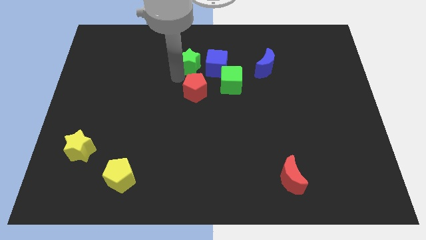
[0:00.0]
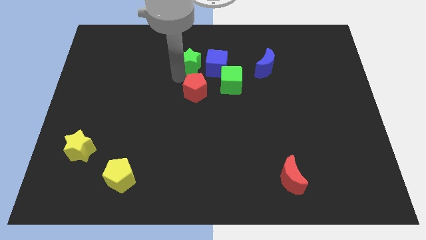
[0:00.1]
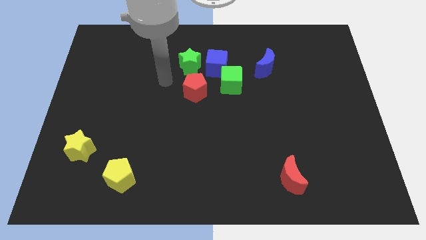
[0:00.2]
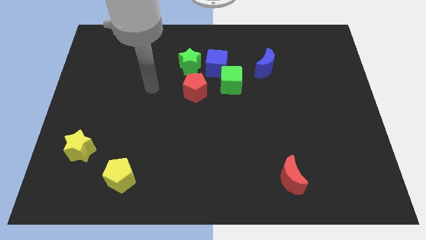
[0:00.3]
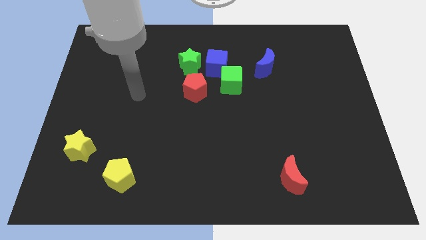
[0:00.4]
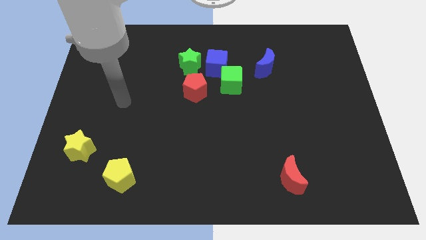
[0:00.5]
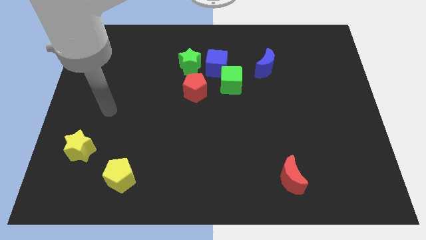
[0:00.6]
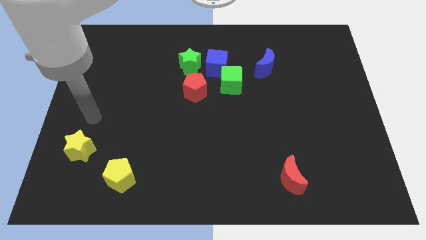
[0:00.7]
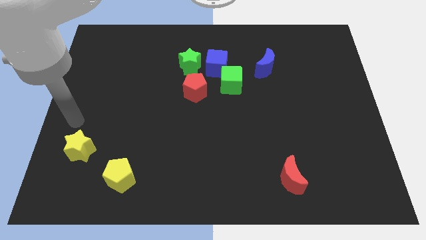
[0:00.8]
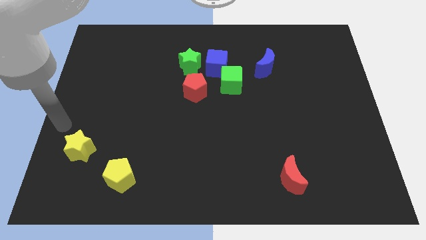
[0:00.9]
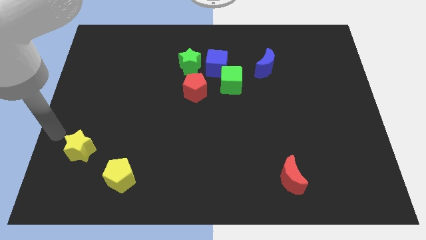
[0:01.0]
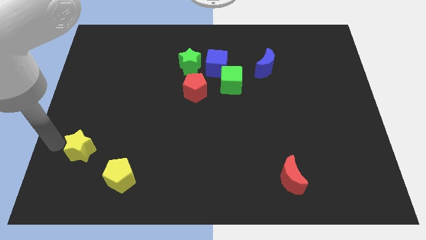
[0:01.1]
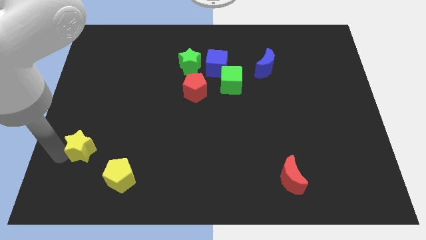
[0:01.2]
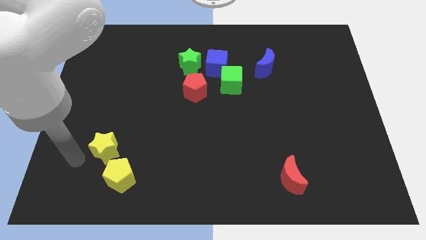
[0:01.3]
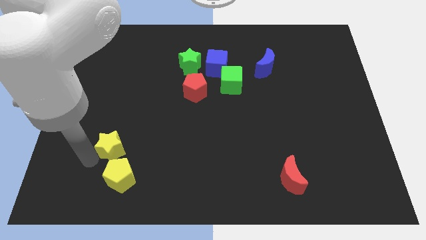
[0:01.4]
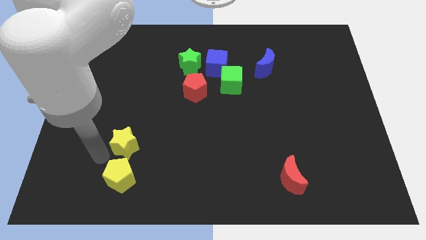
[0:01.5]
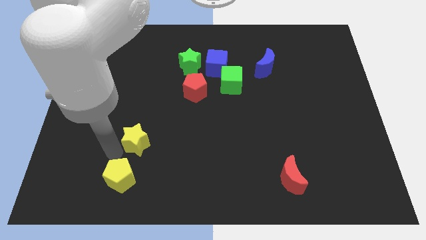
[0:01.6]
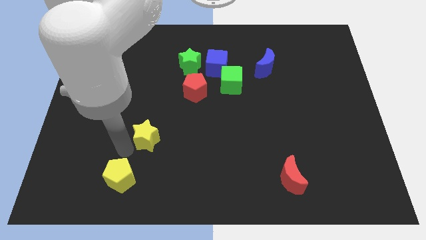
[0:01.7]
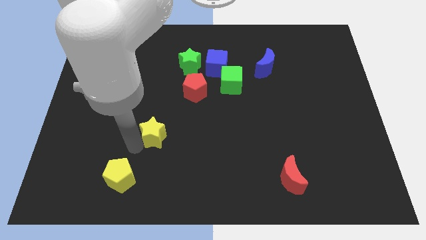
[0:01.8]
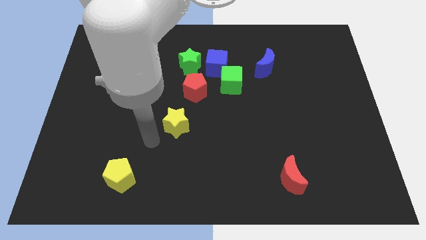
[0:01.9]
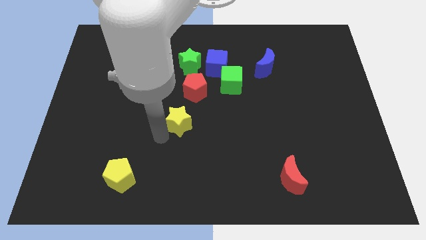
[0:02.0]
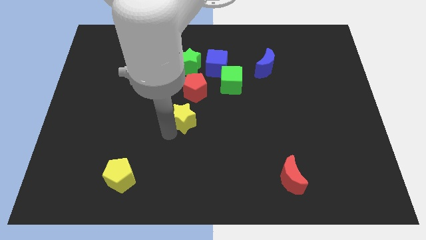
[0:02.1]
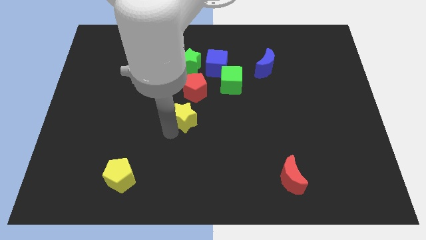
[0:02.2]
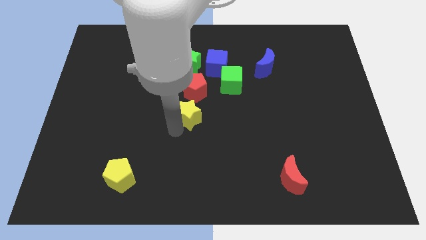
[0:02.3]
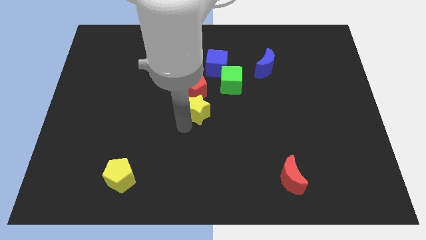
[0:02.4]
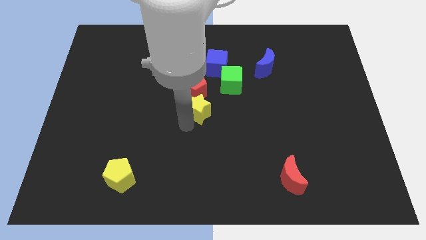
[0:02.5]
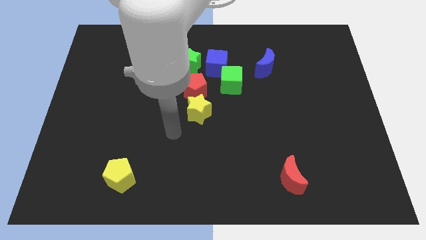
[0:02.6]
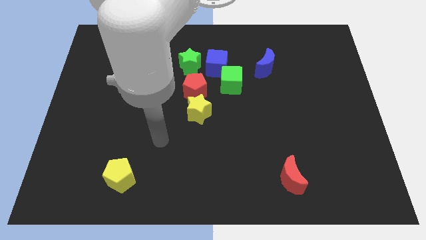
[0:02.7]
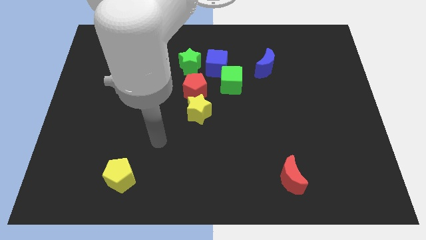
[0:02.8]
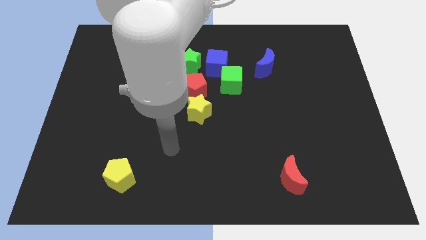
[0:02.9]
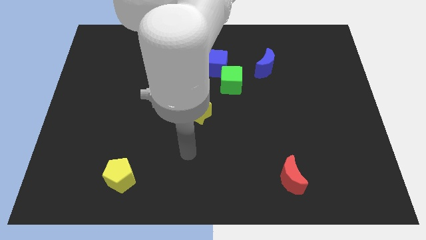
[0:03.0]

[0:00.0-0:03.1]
push yellow star to the center

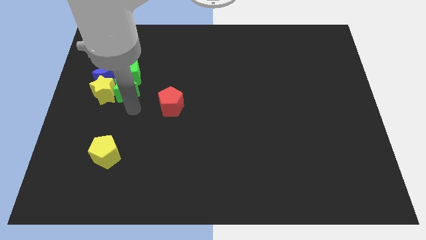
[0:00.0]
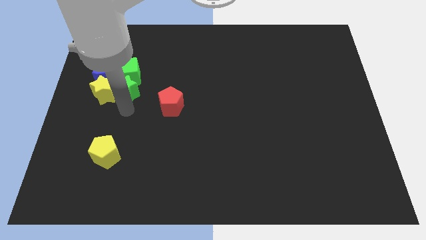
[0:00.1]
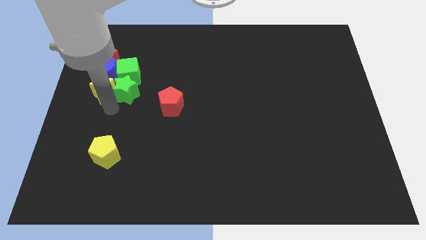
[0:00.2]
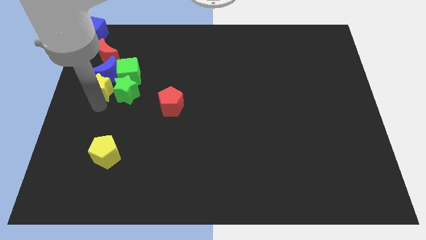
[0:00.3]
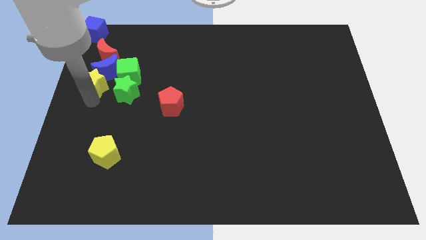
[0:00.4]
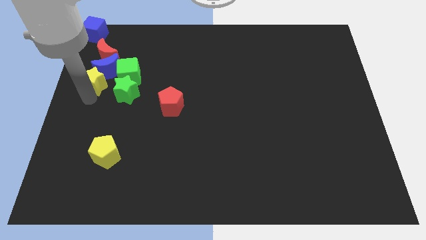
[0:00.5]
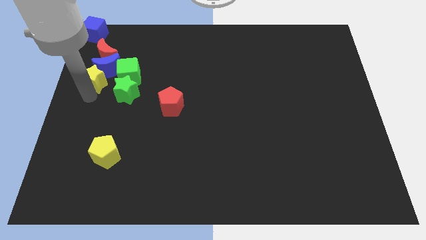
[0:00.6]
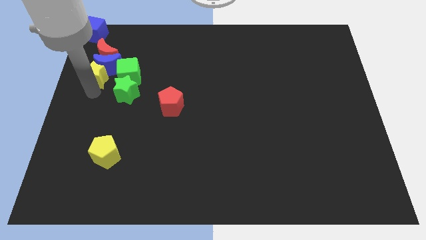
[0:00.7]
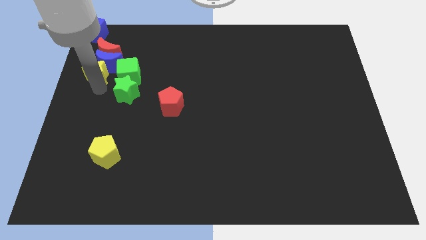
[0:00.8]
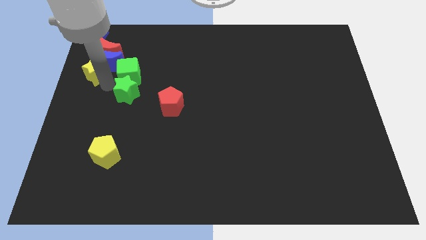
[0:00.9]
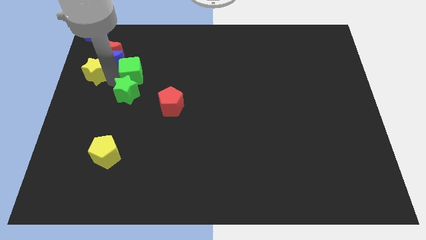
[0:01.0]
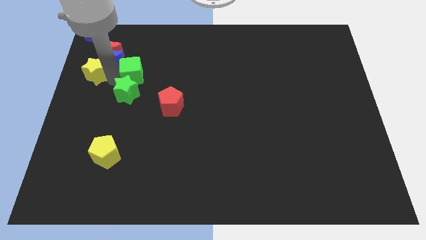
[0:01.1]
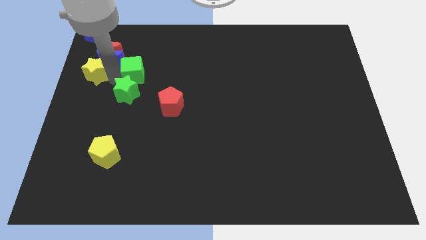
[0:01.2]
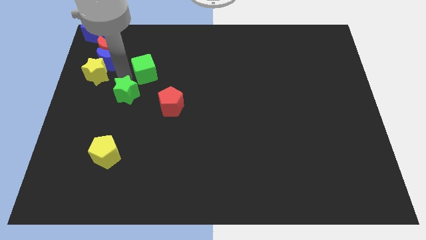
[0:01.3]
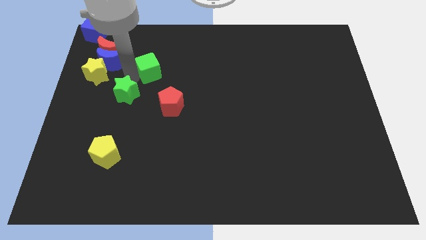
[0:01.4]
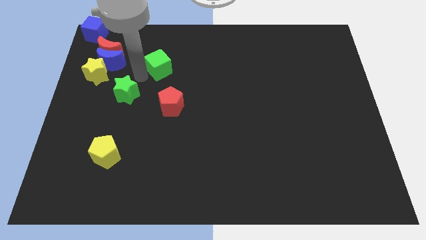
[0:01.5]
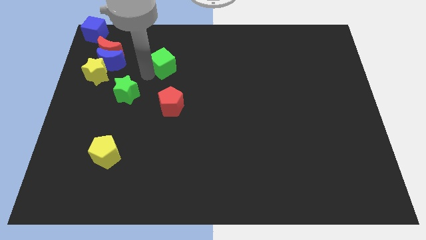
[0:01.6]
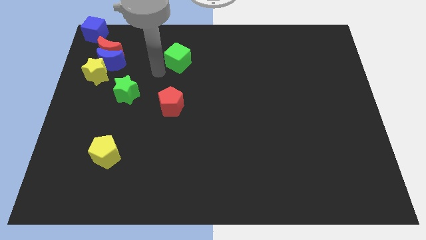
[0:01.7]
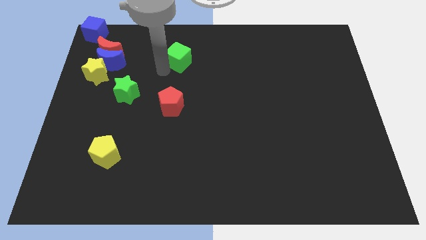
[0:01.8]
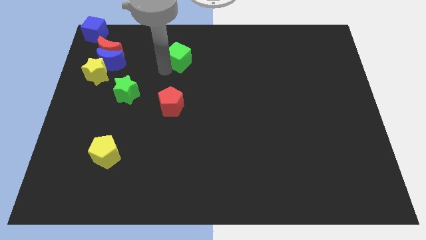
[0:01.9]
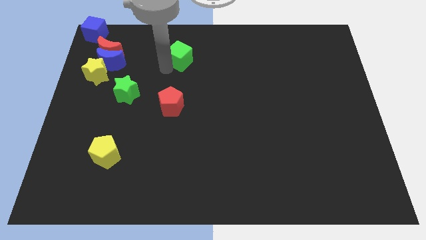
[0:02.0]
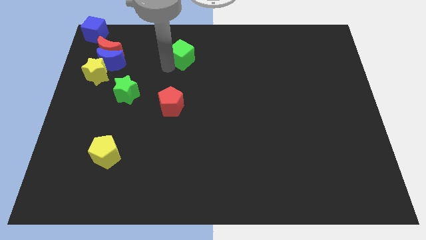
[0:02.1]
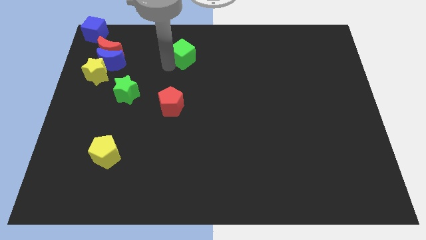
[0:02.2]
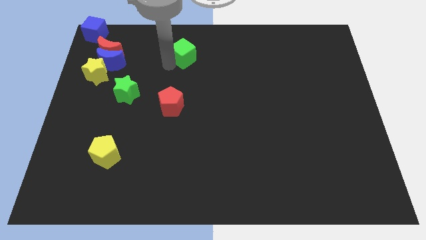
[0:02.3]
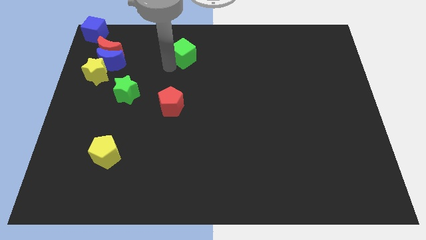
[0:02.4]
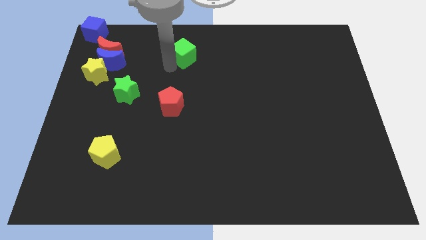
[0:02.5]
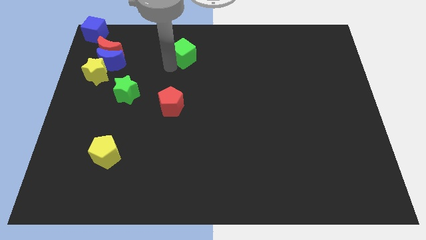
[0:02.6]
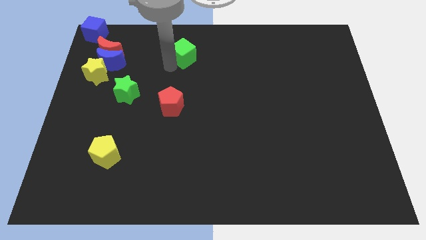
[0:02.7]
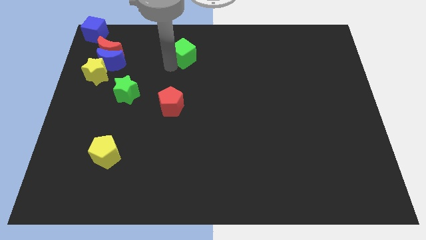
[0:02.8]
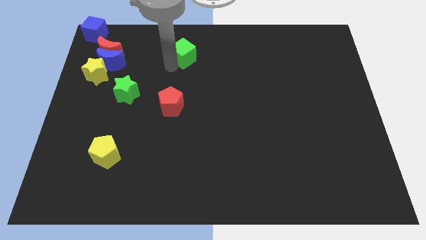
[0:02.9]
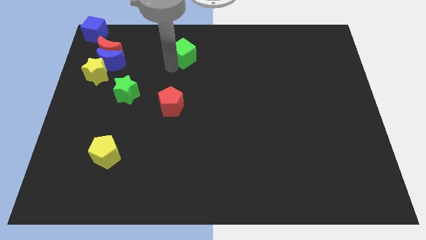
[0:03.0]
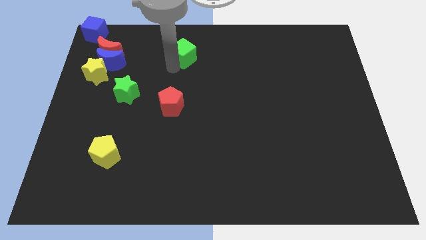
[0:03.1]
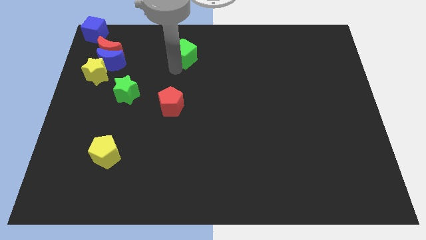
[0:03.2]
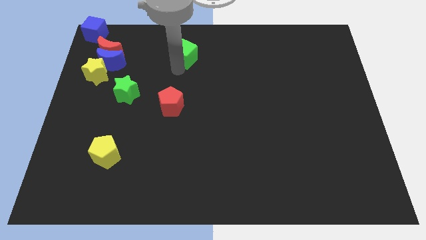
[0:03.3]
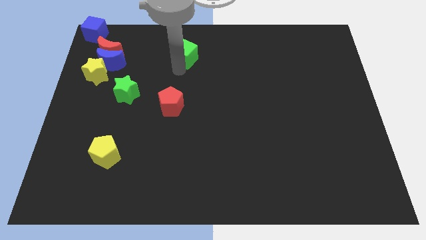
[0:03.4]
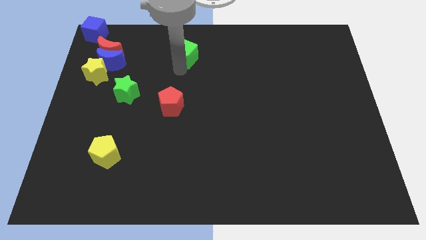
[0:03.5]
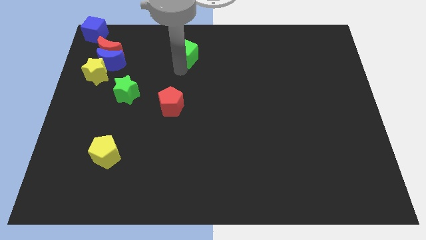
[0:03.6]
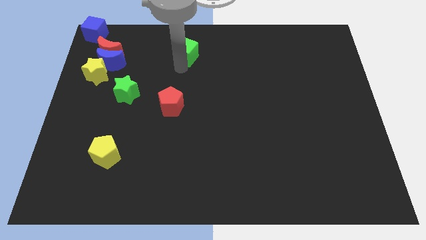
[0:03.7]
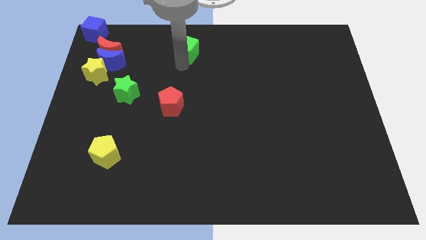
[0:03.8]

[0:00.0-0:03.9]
move the green cube above the red pentagon

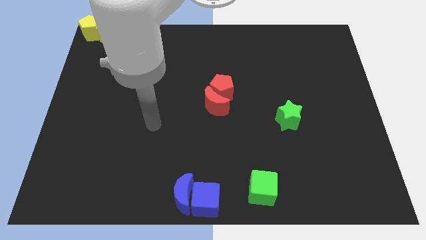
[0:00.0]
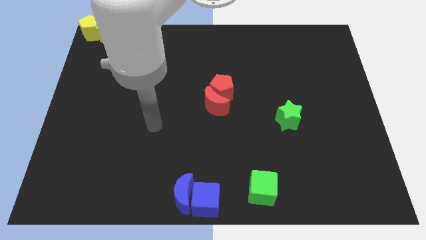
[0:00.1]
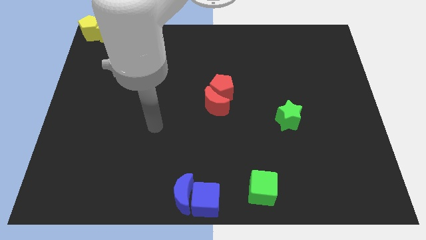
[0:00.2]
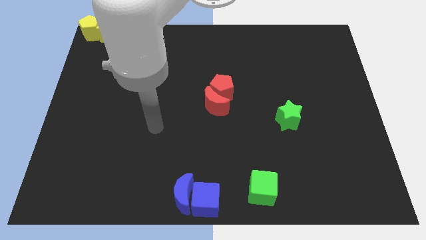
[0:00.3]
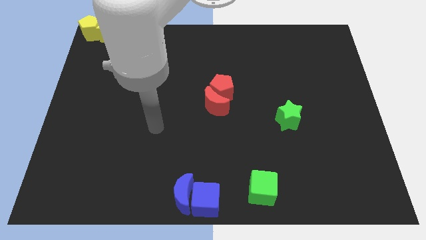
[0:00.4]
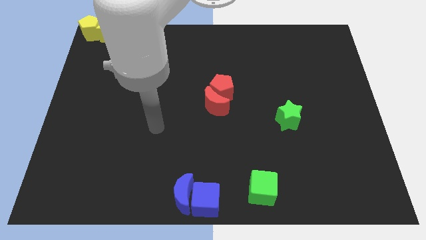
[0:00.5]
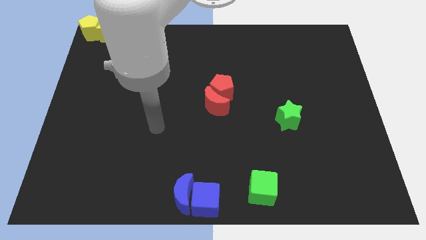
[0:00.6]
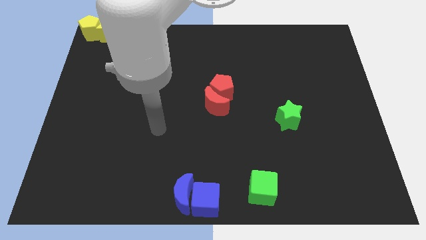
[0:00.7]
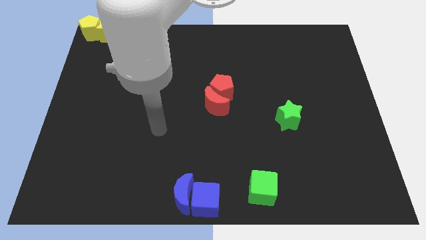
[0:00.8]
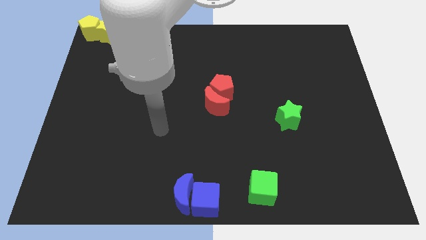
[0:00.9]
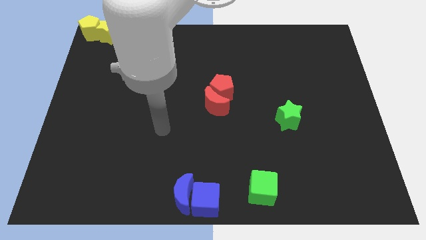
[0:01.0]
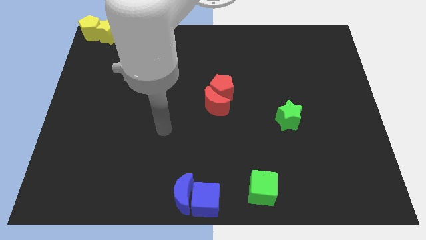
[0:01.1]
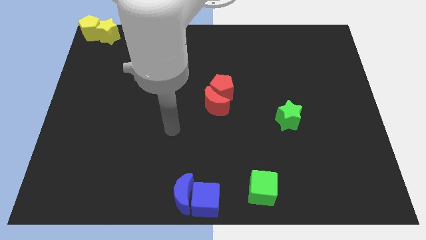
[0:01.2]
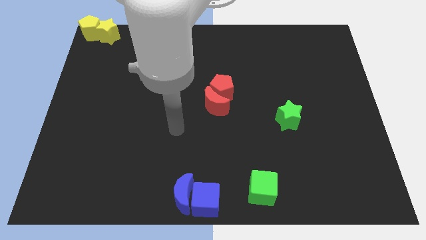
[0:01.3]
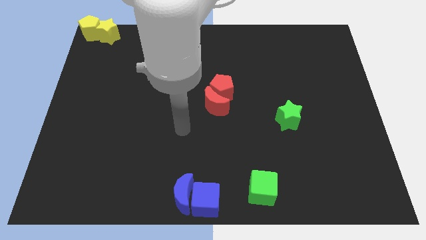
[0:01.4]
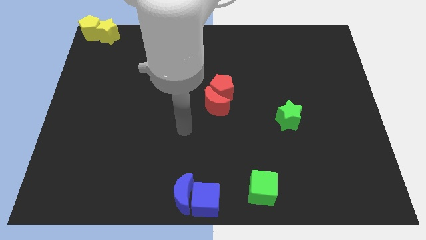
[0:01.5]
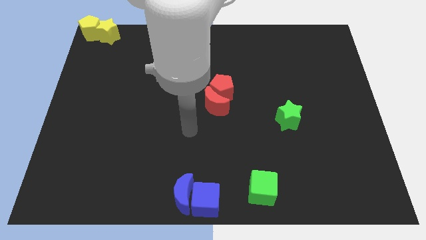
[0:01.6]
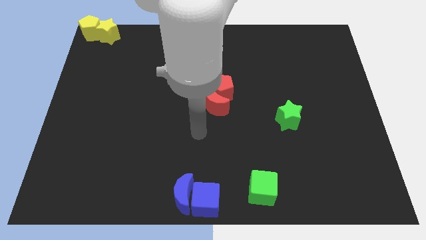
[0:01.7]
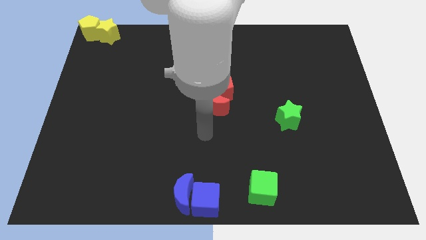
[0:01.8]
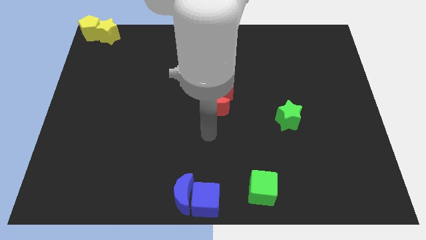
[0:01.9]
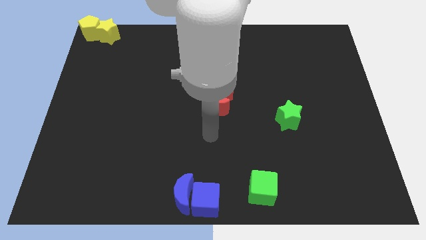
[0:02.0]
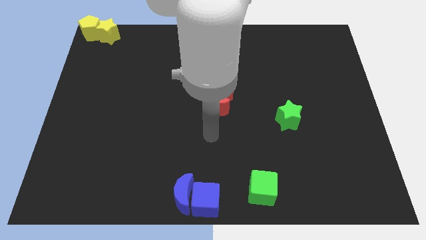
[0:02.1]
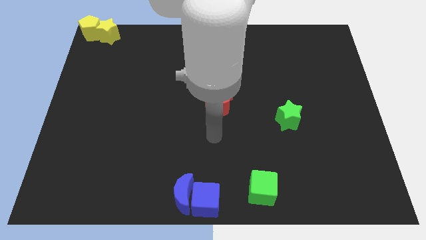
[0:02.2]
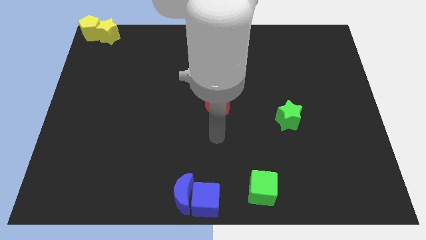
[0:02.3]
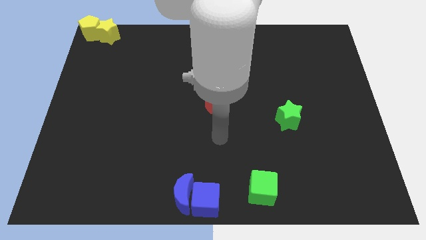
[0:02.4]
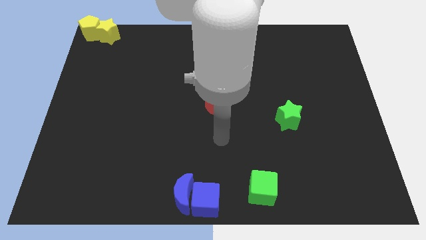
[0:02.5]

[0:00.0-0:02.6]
move your arm below the red crescent
